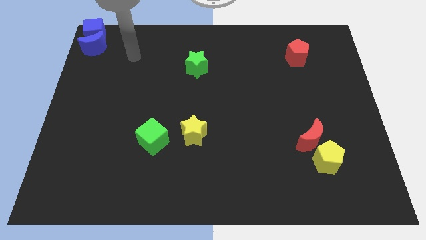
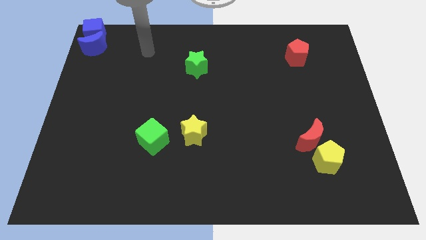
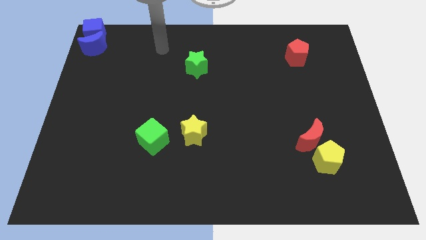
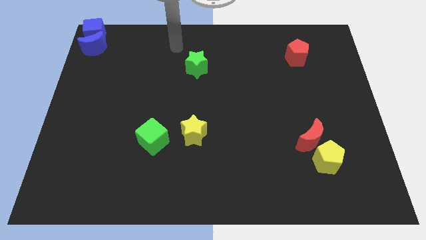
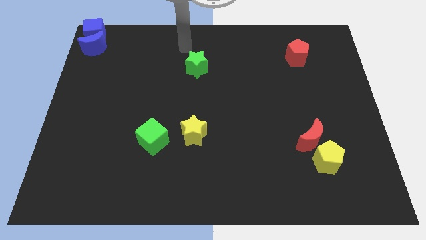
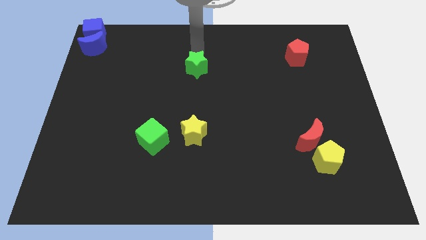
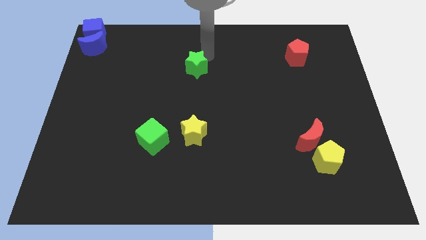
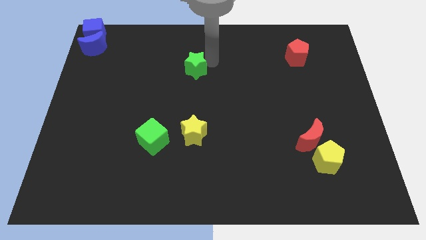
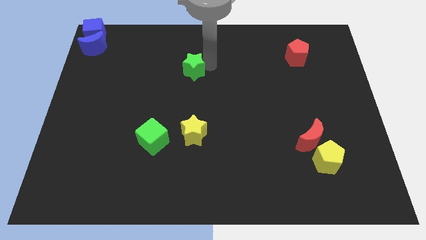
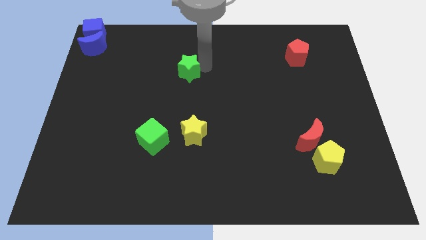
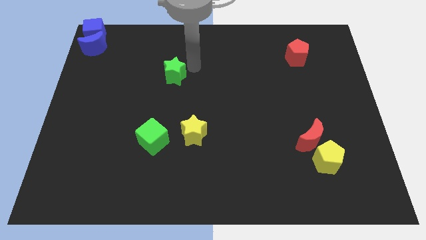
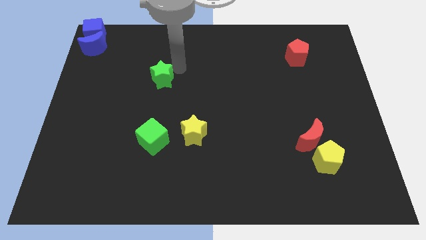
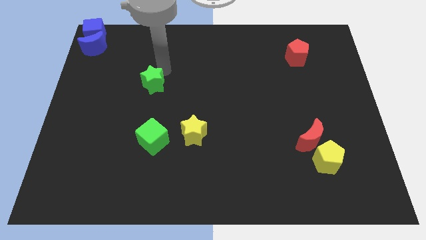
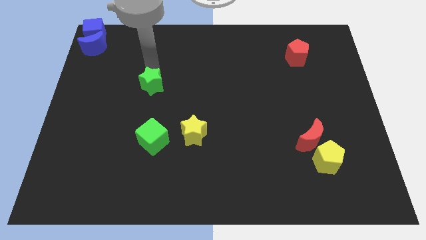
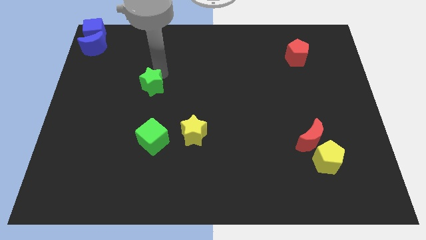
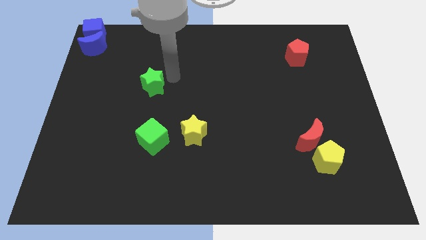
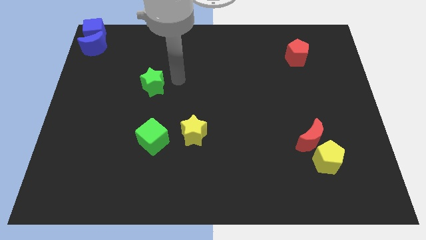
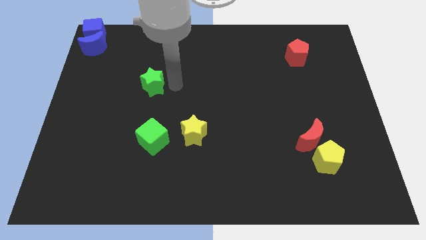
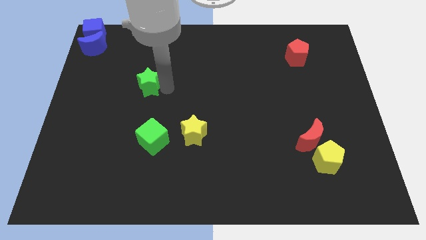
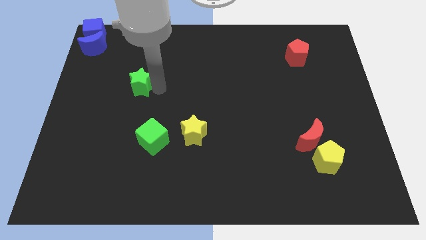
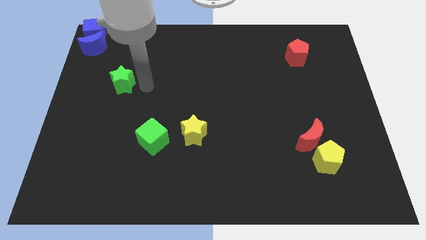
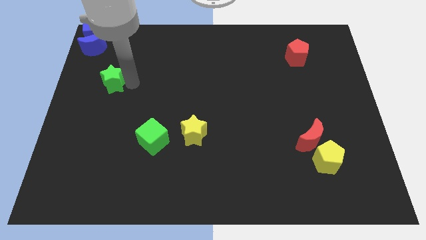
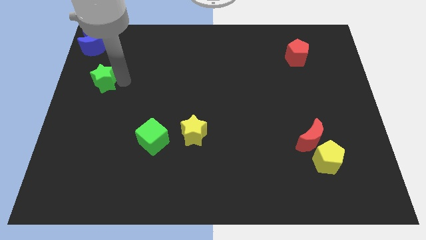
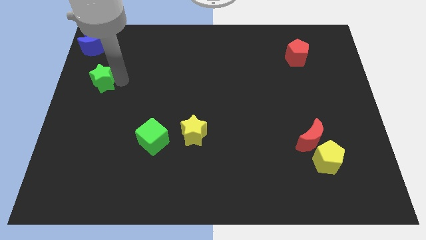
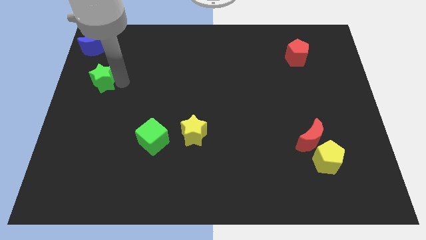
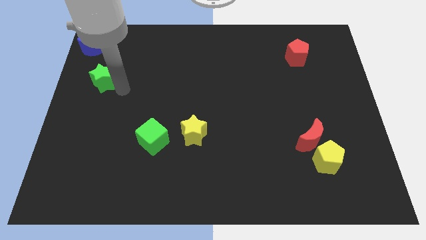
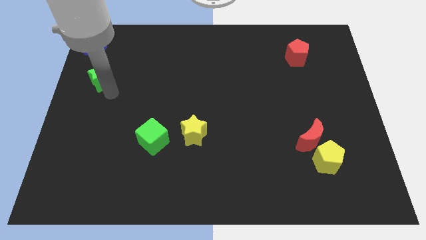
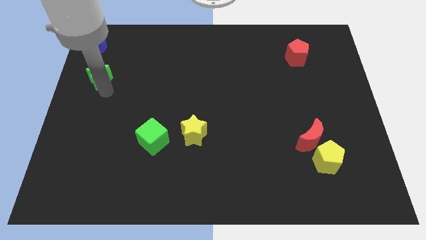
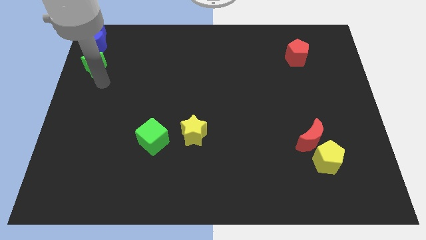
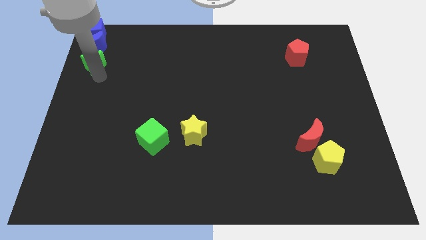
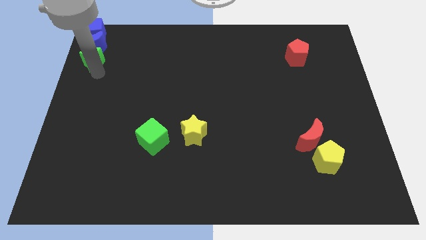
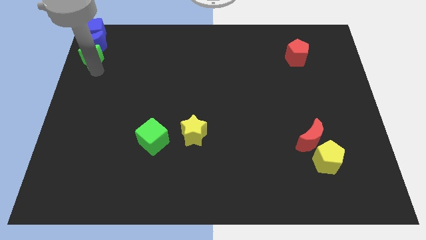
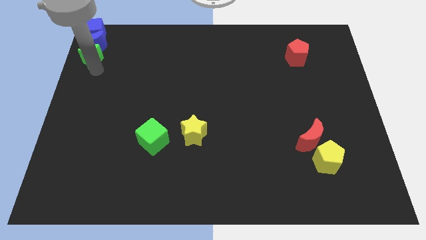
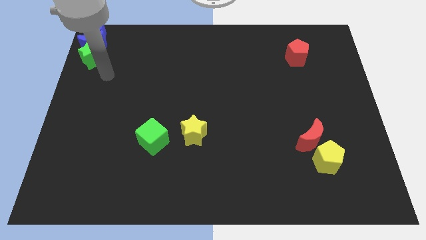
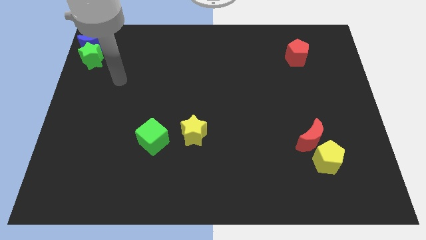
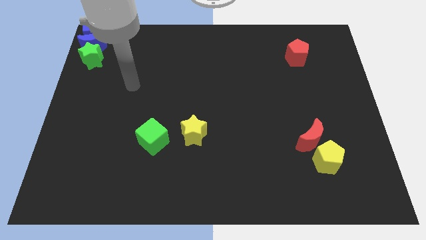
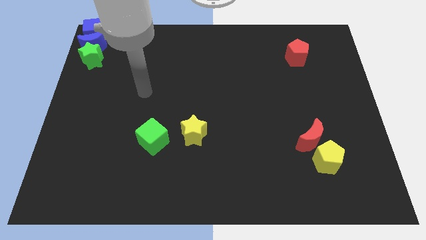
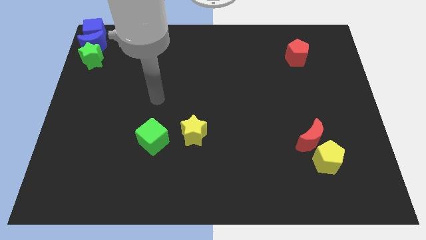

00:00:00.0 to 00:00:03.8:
push the green star into blue moon

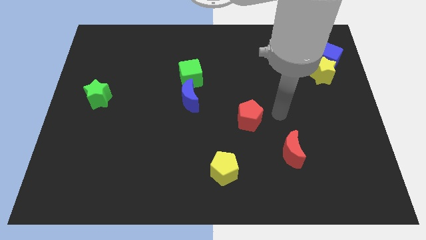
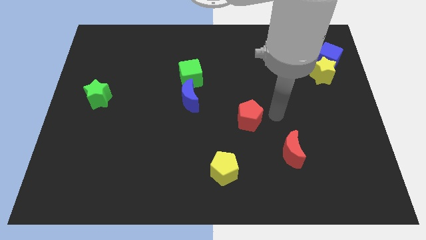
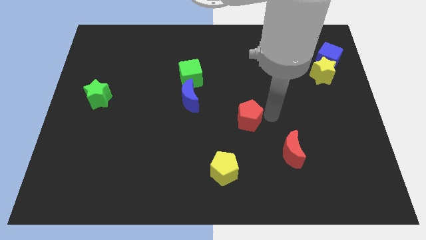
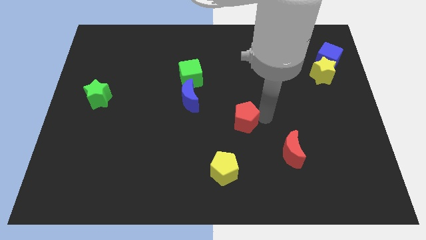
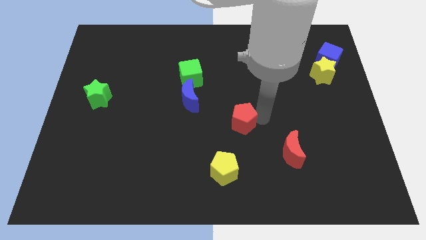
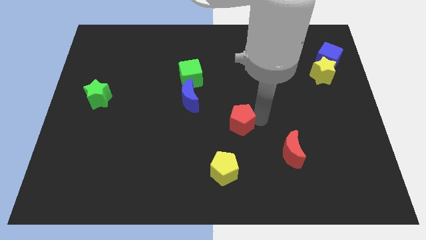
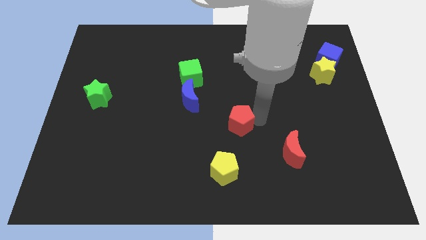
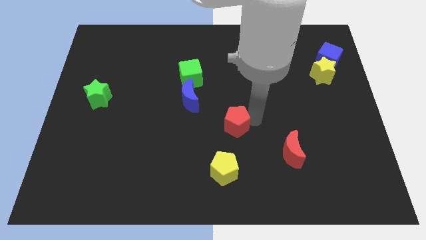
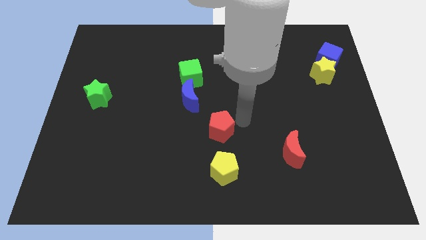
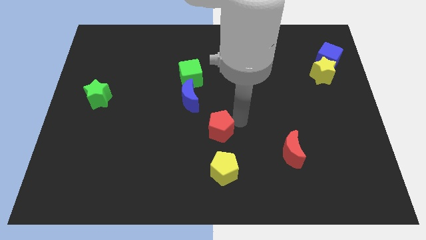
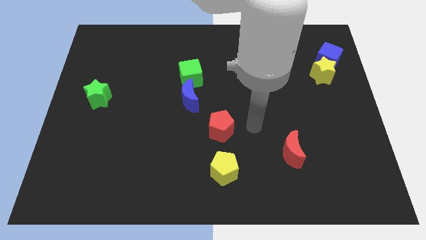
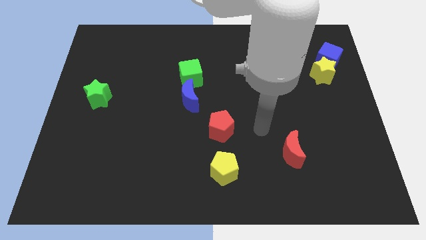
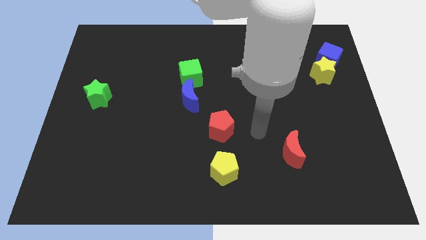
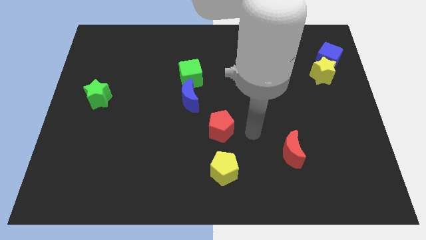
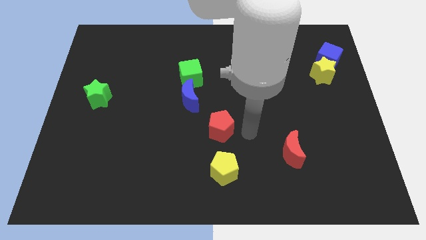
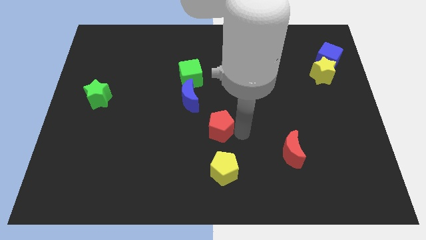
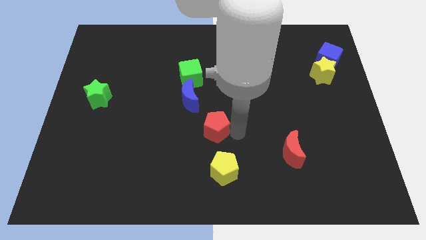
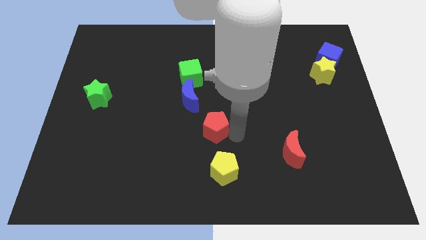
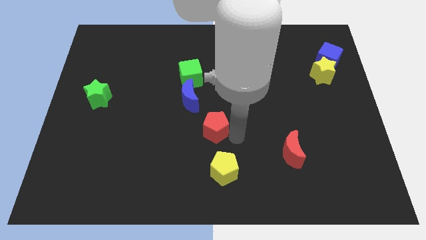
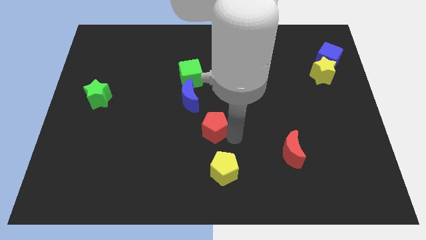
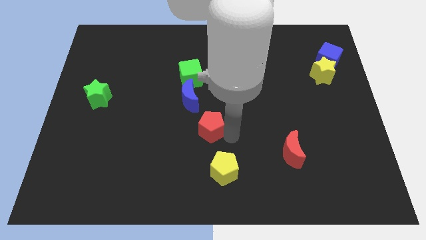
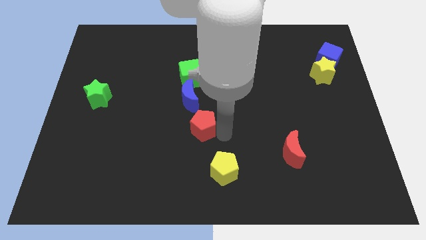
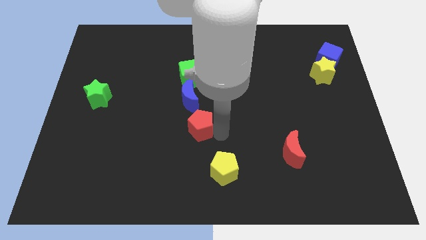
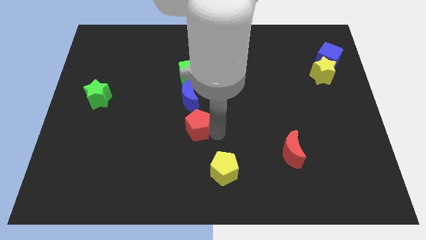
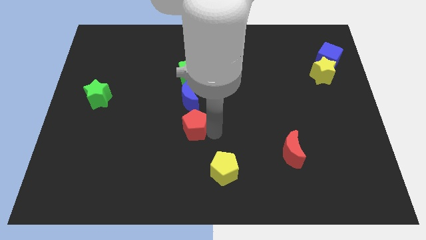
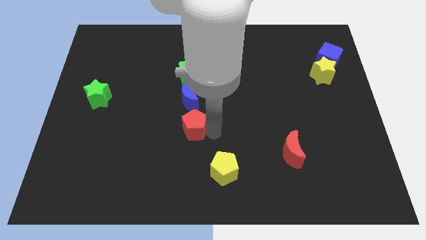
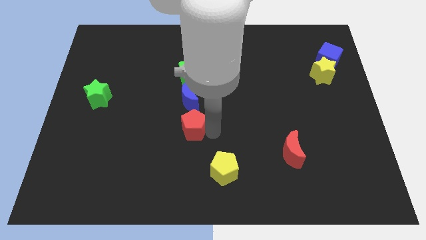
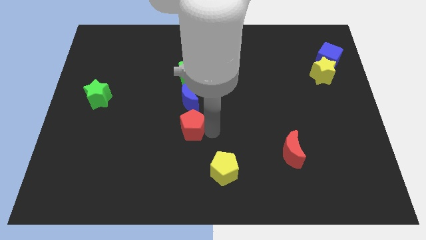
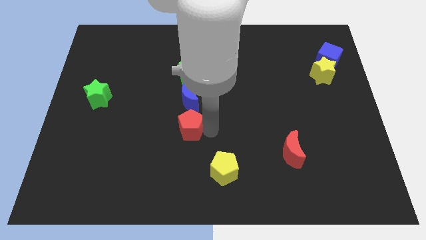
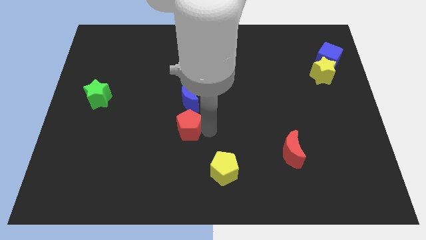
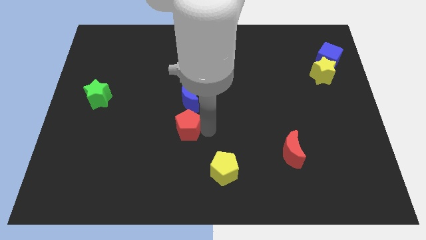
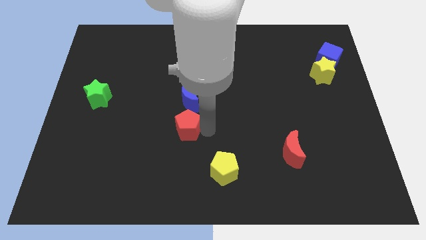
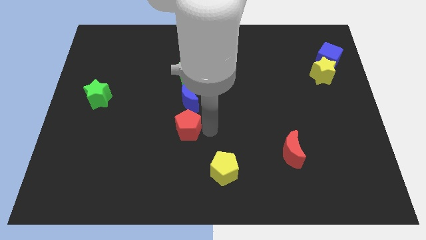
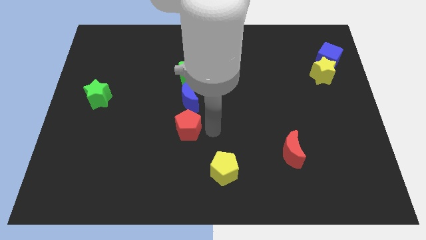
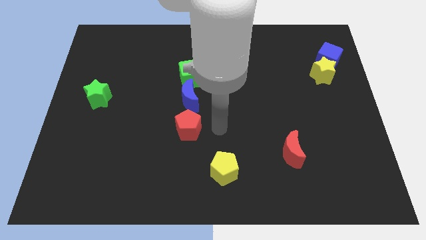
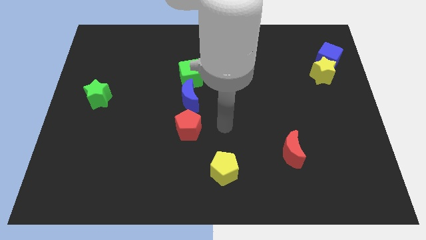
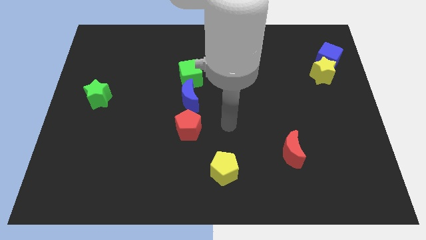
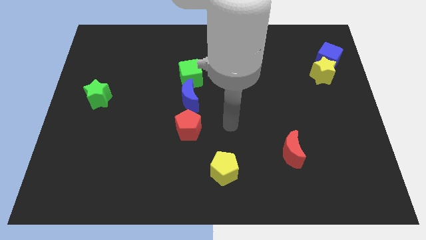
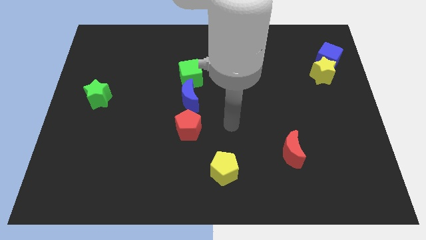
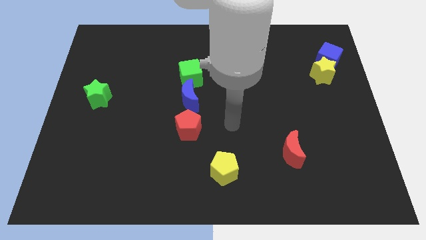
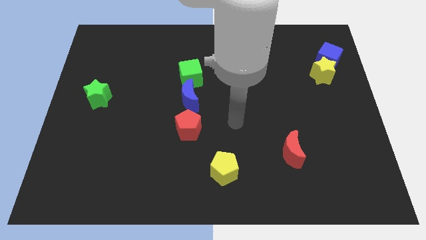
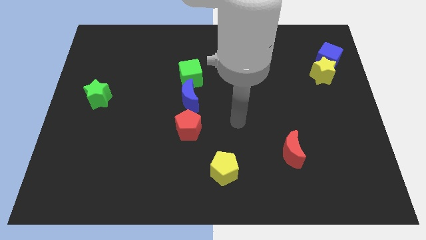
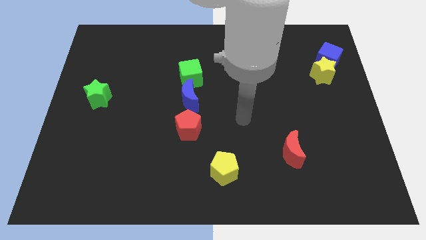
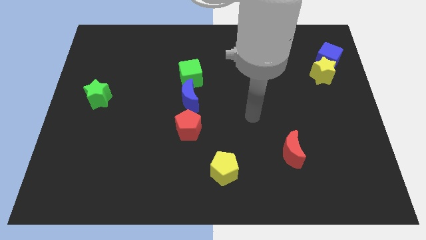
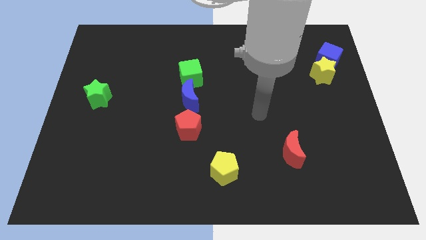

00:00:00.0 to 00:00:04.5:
place red pentagon below the blue crescent

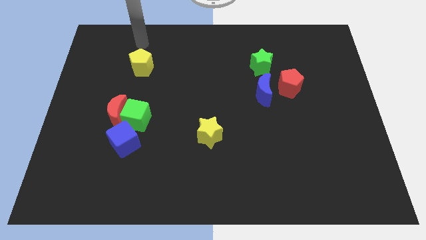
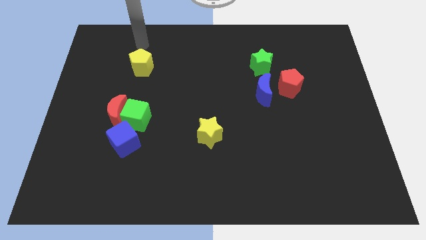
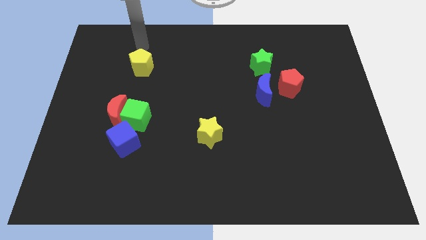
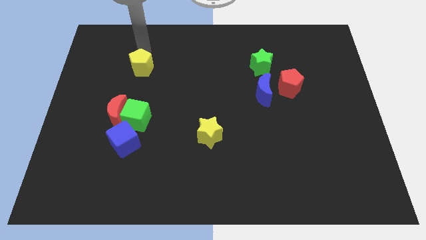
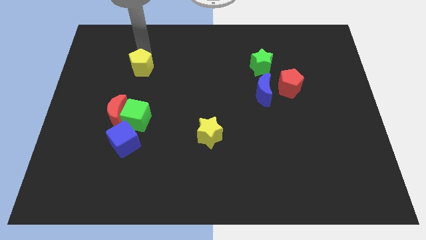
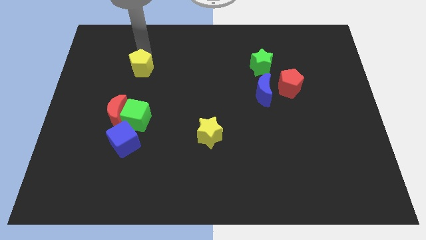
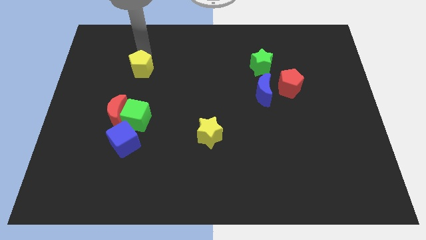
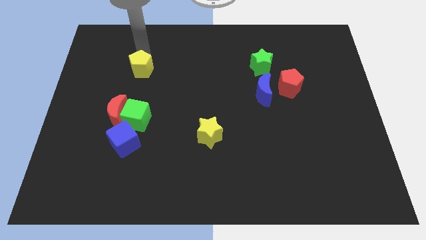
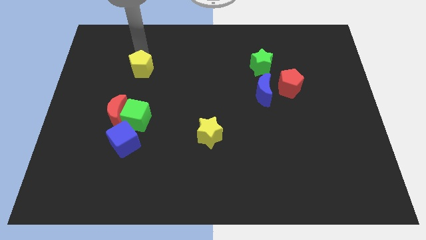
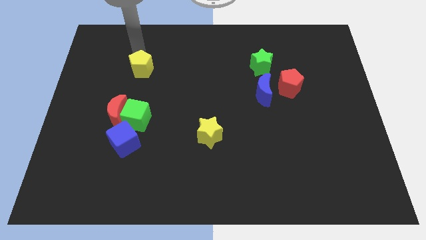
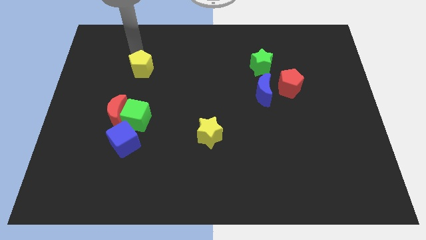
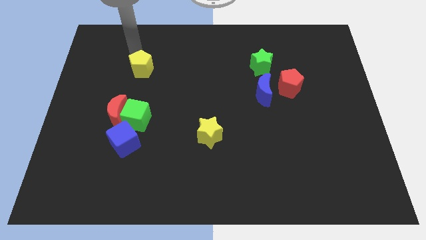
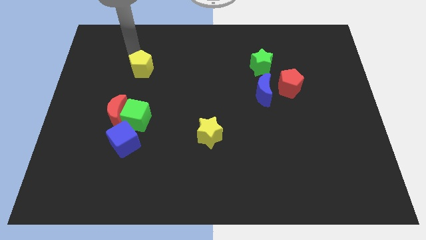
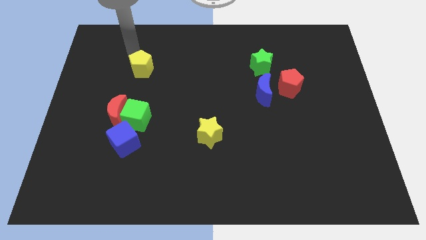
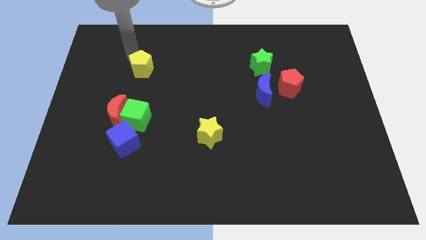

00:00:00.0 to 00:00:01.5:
slightly push yellow pentagon towards its bottom
